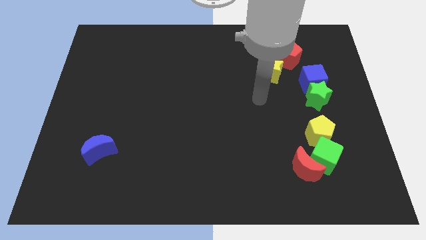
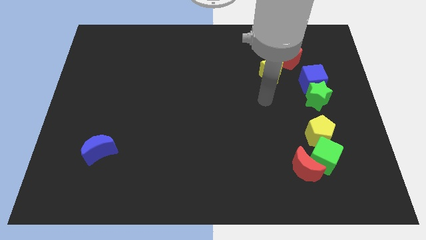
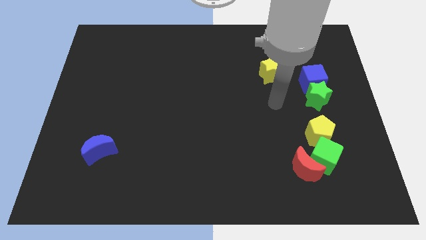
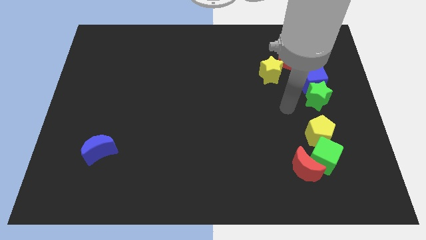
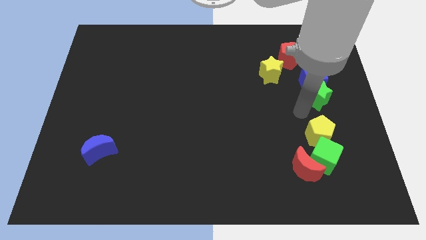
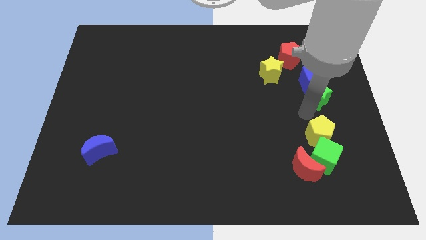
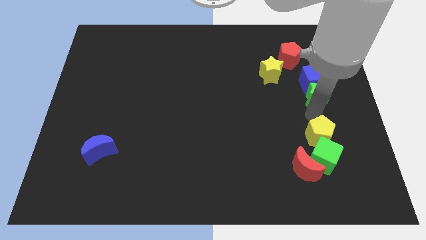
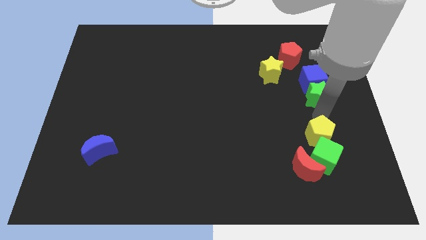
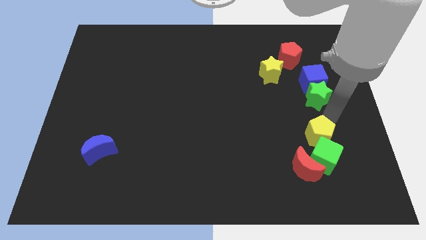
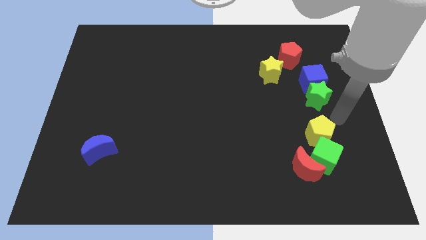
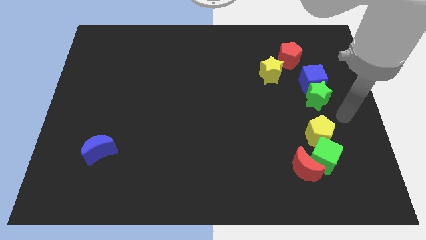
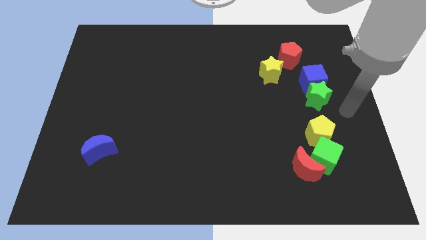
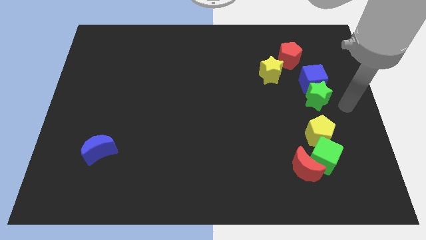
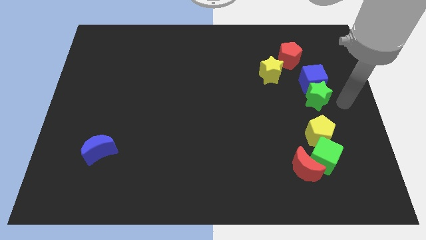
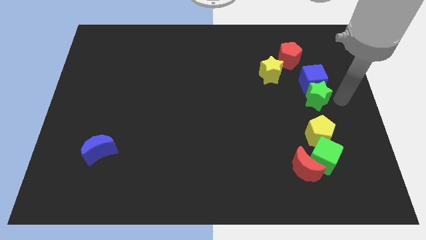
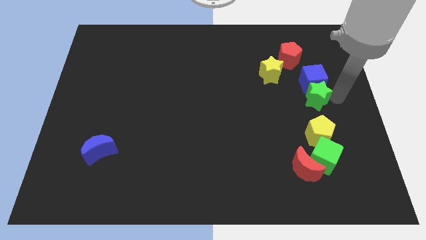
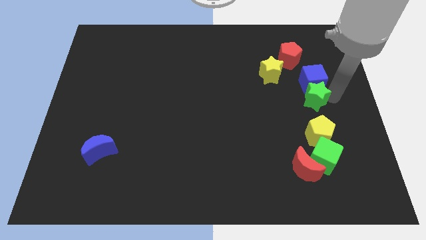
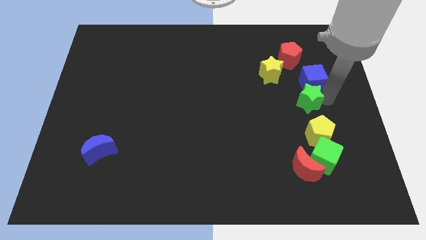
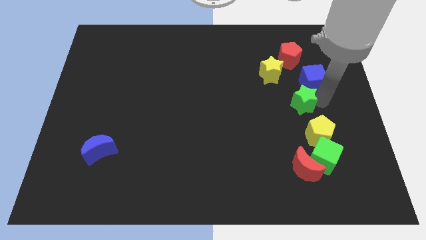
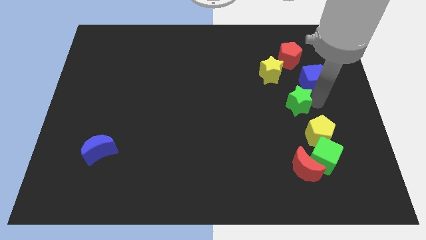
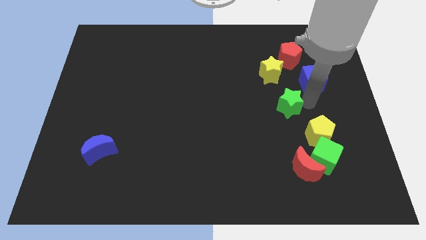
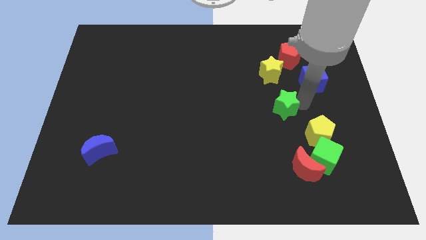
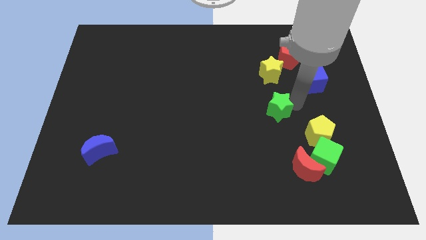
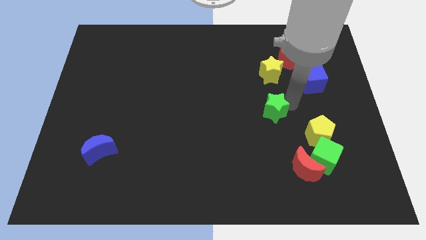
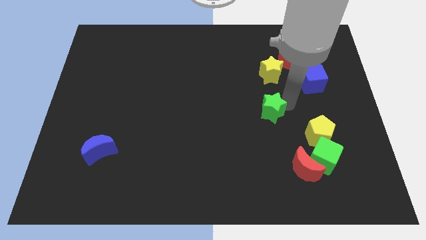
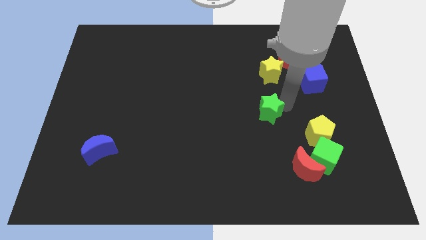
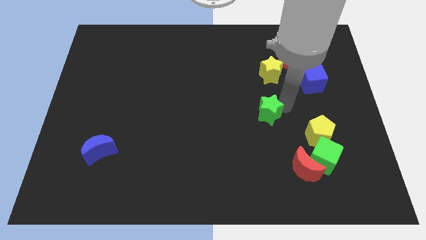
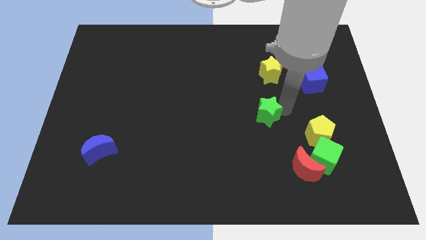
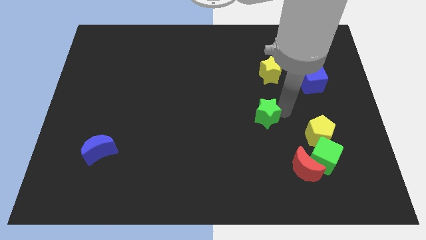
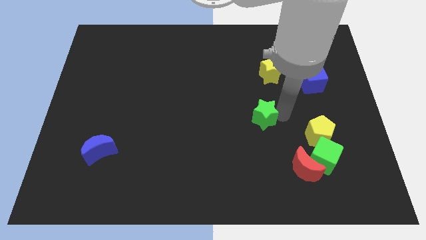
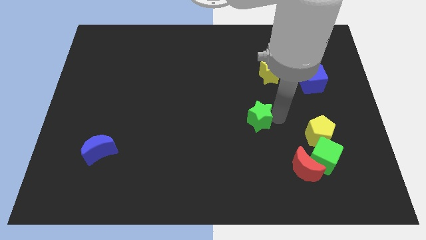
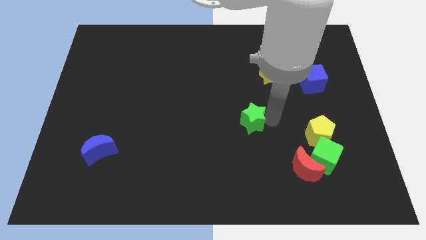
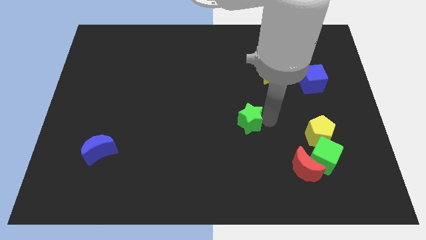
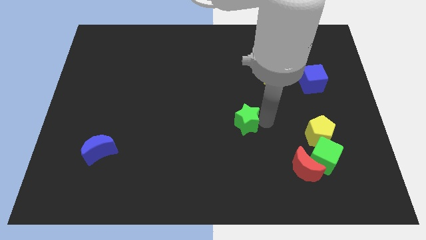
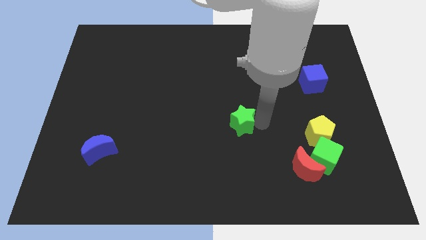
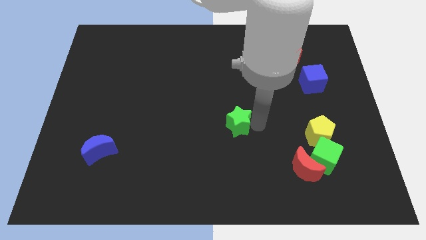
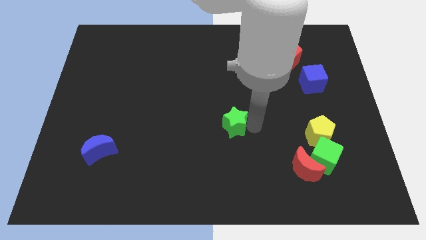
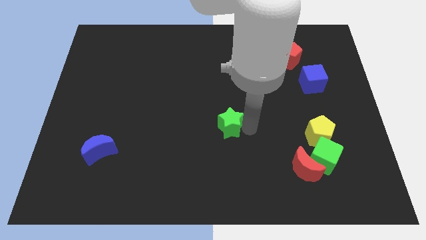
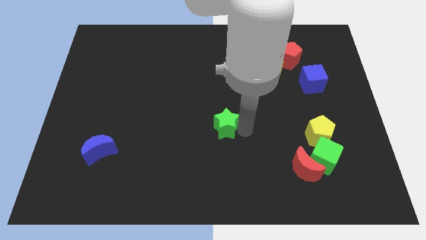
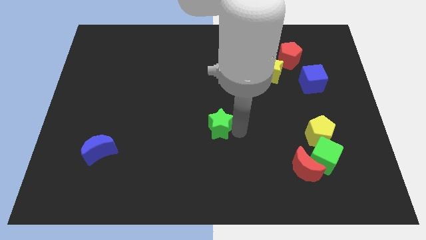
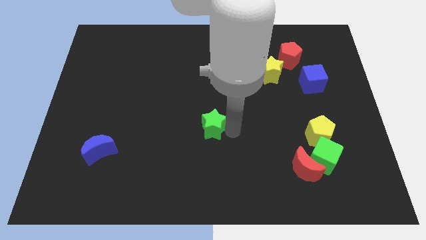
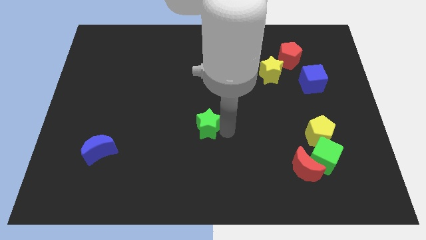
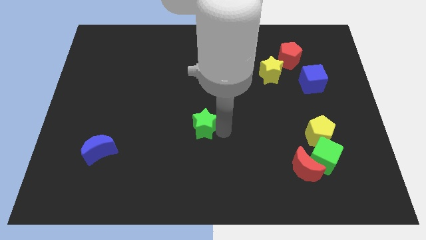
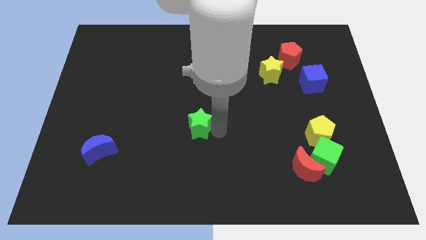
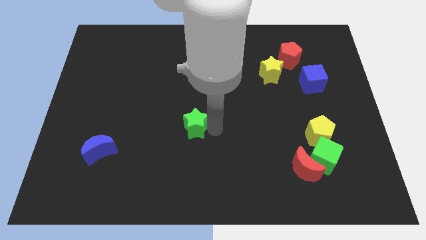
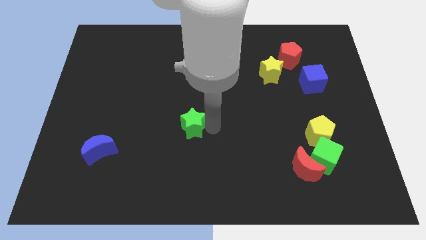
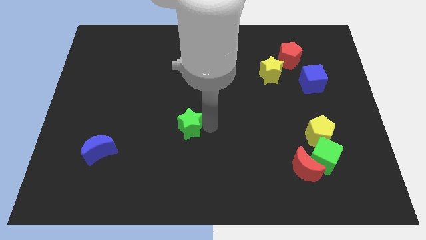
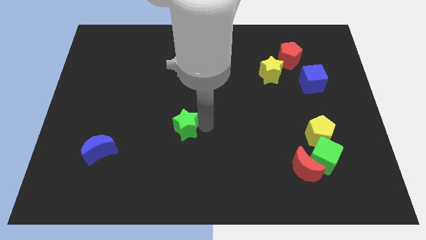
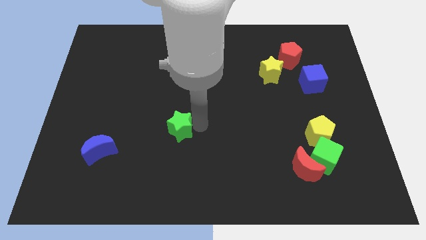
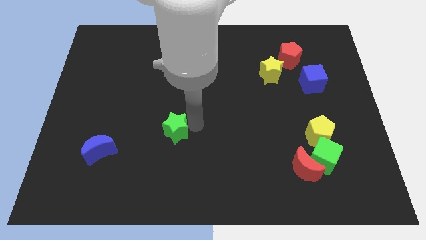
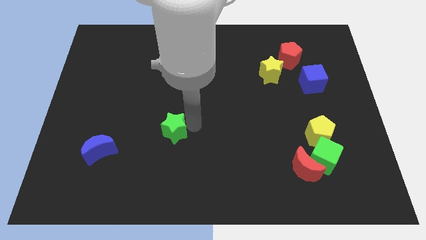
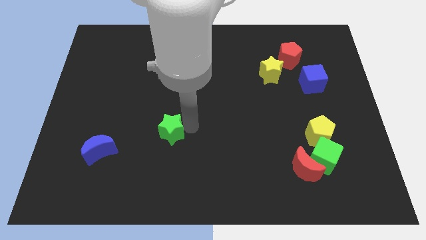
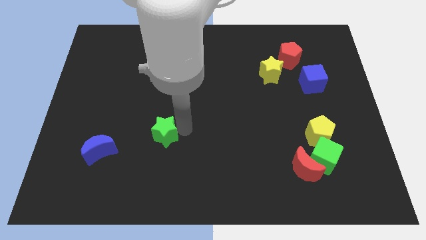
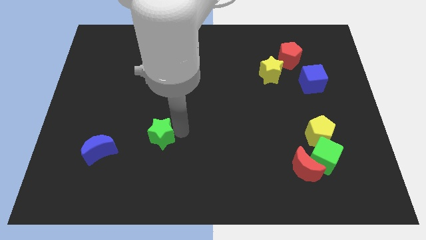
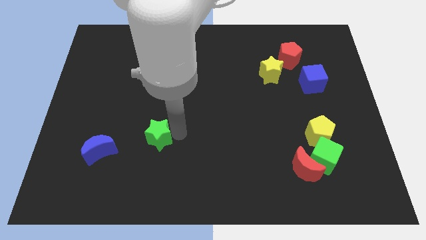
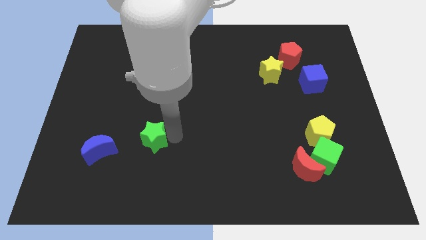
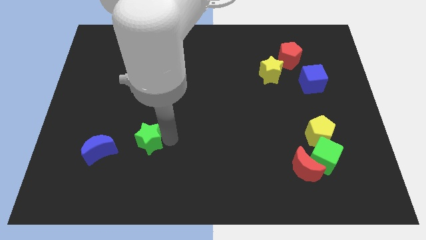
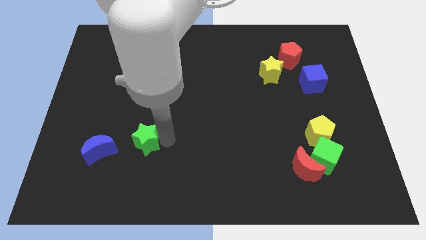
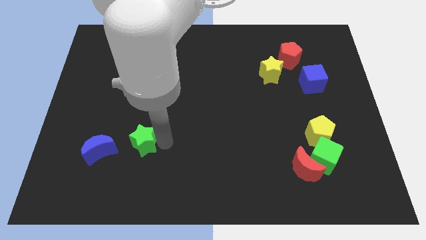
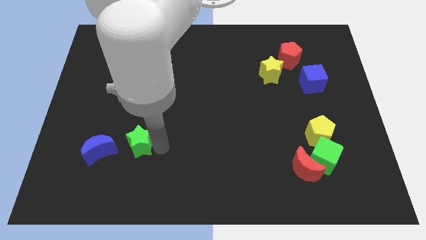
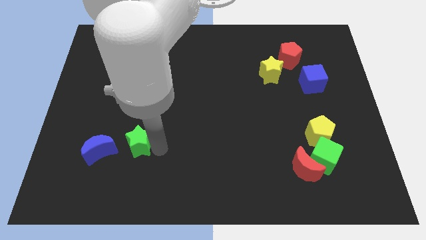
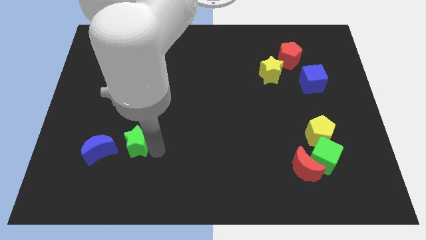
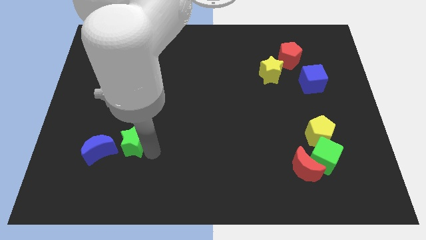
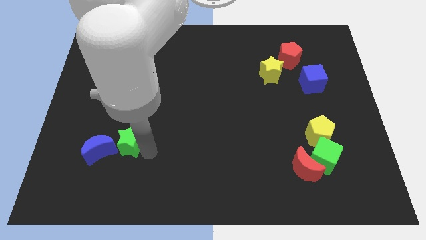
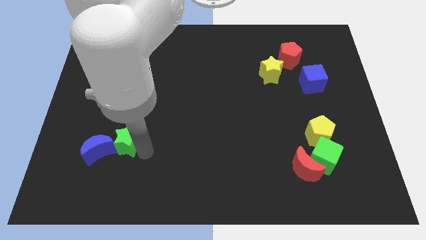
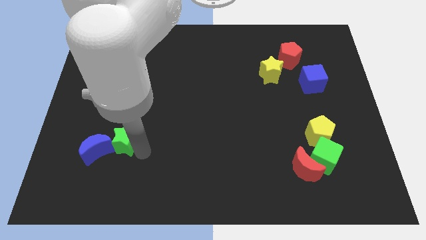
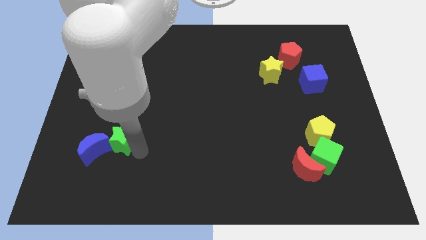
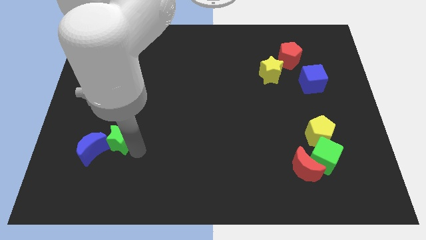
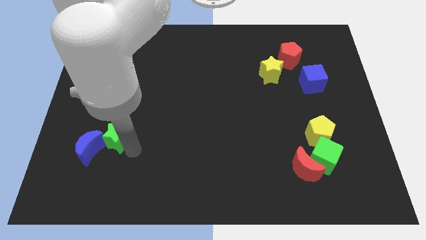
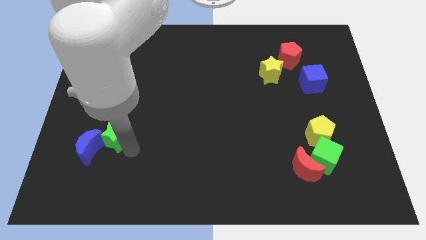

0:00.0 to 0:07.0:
push the green star towards the blue moon

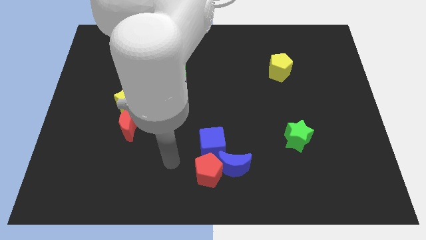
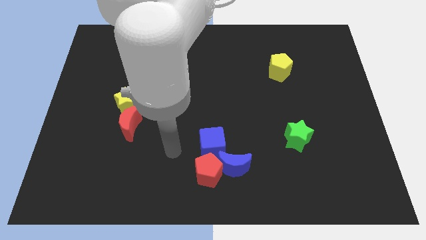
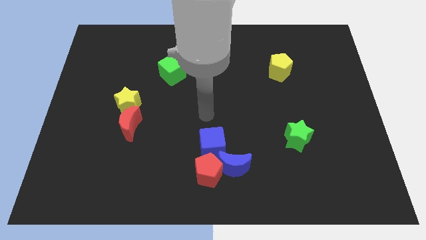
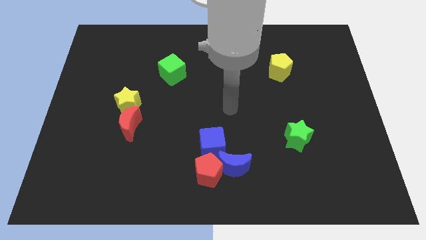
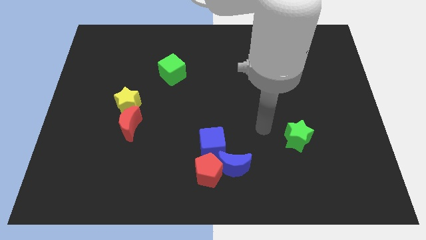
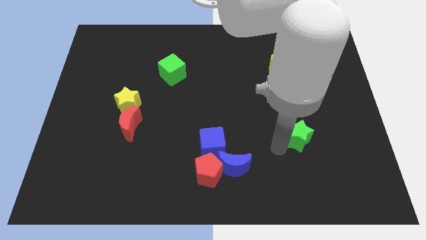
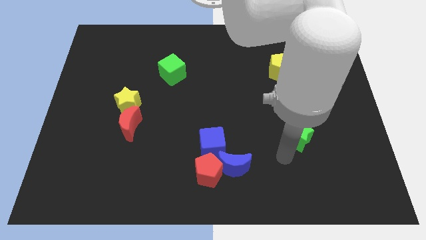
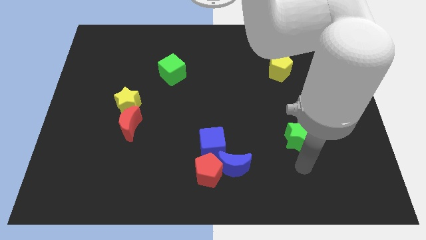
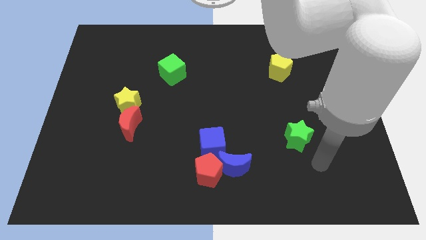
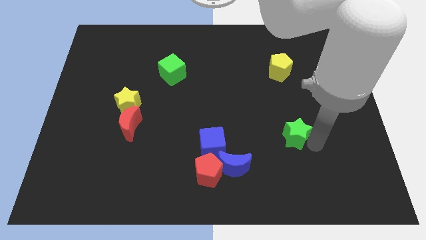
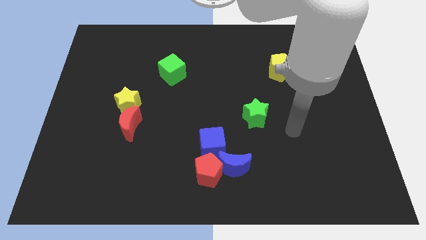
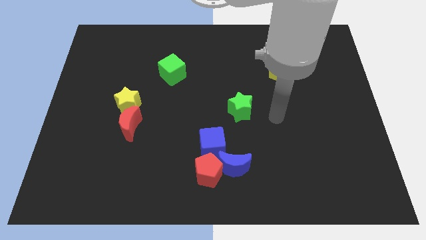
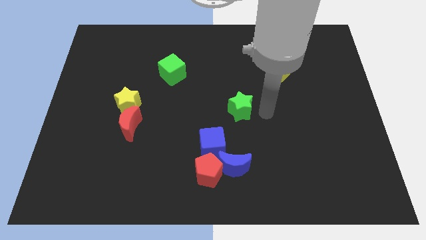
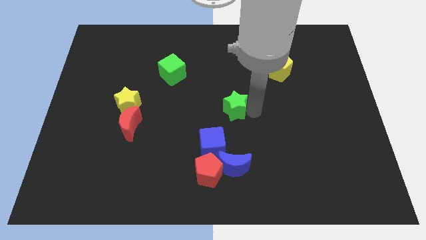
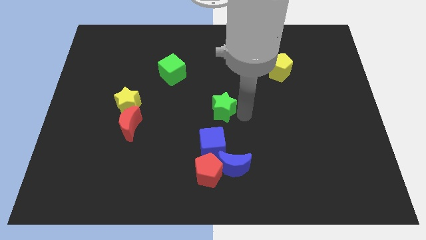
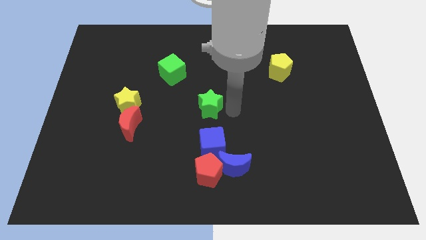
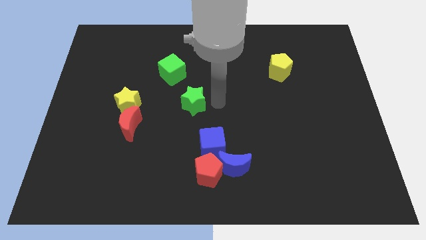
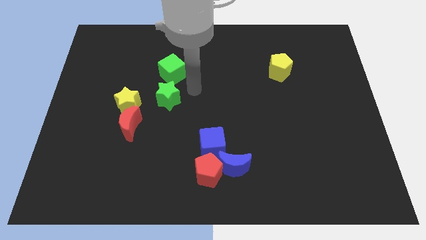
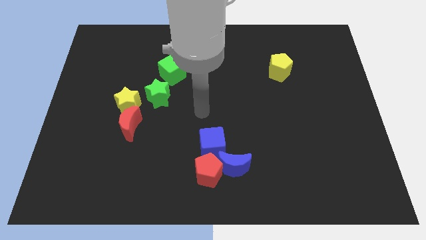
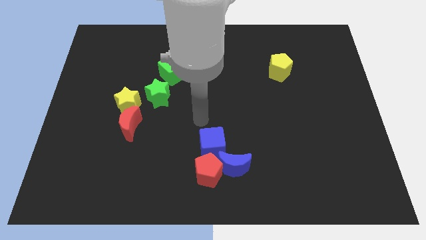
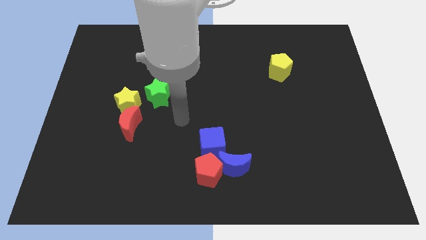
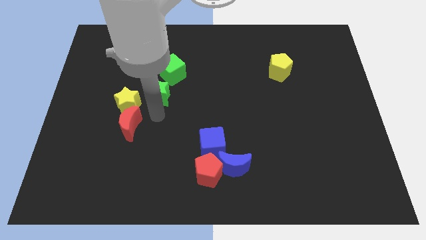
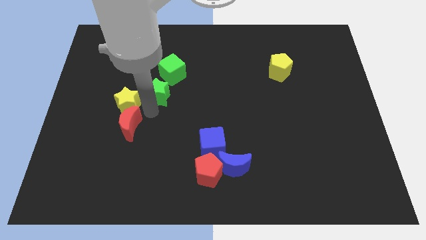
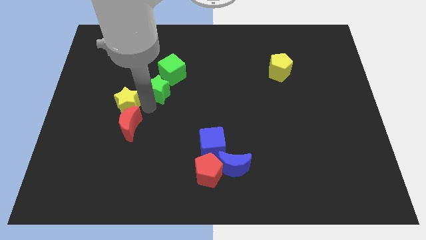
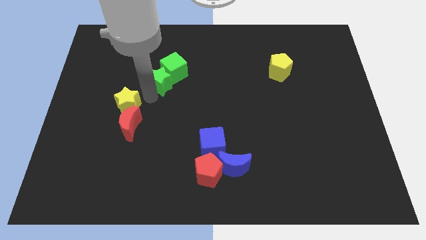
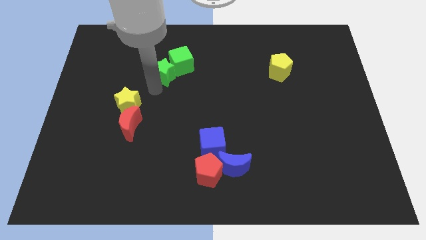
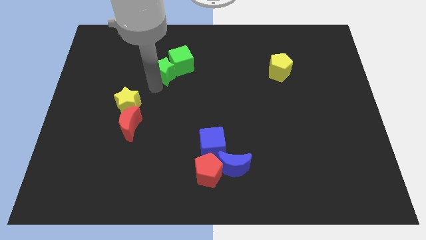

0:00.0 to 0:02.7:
move the green star next to the green cube
